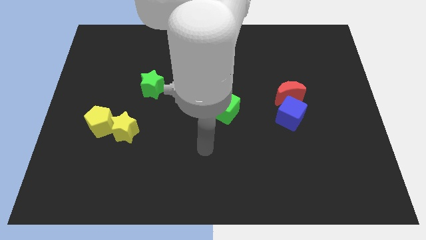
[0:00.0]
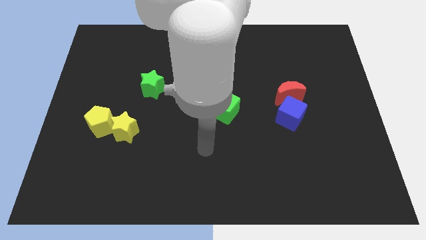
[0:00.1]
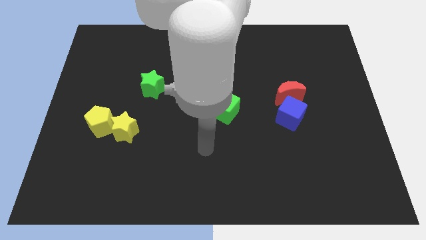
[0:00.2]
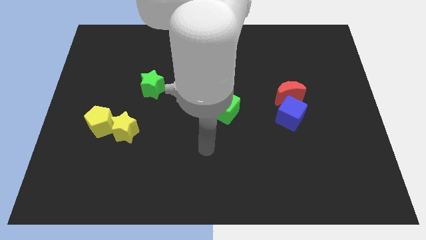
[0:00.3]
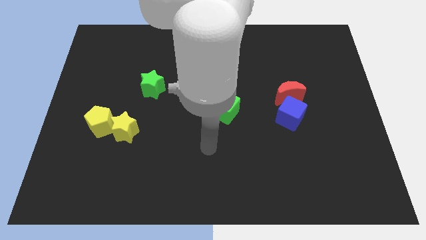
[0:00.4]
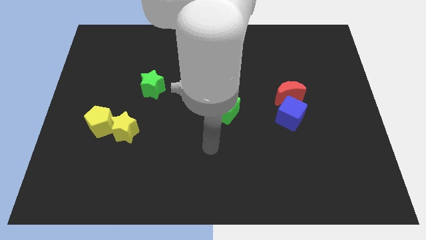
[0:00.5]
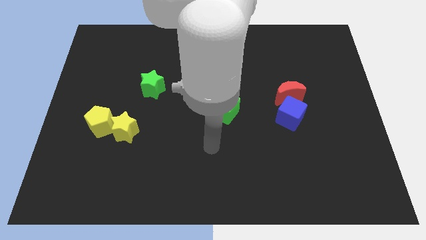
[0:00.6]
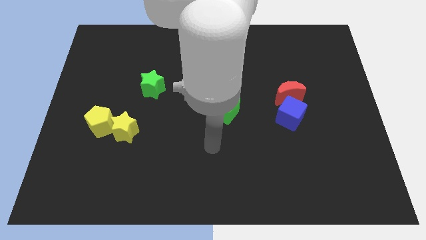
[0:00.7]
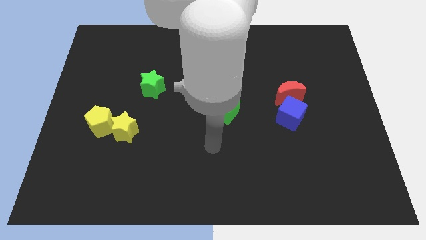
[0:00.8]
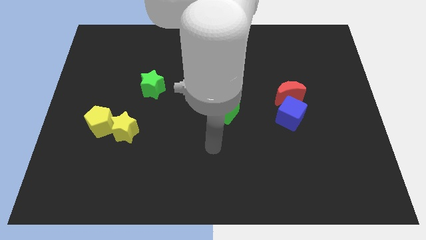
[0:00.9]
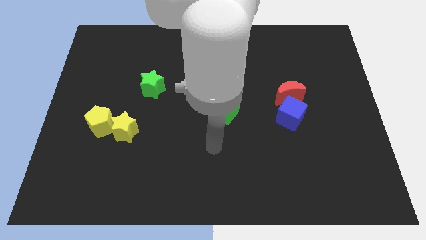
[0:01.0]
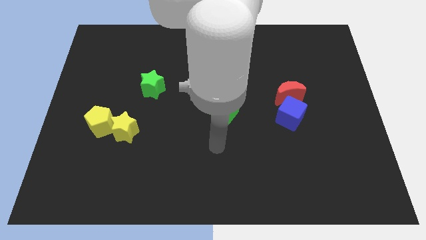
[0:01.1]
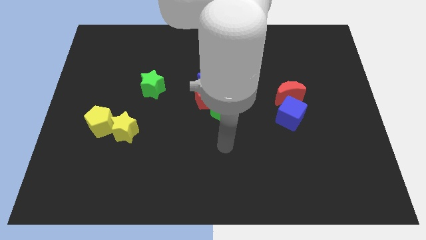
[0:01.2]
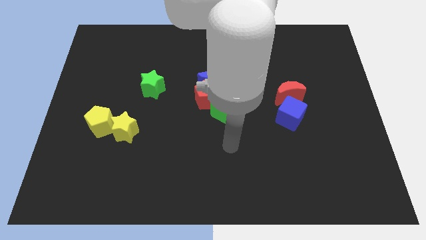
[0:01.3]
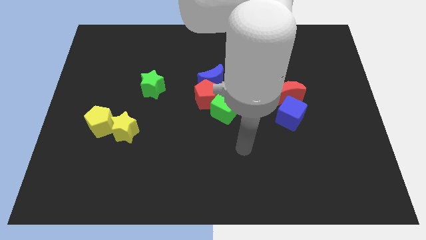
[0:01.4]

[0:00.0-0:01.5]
move the arm at the bottom of the green cube vertically

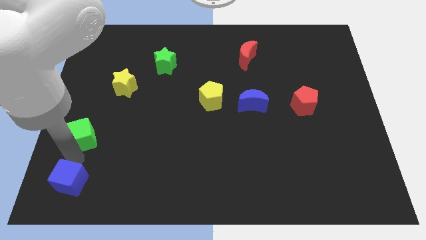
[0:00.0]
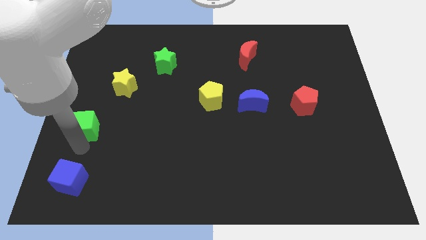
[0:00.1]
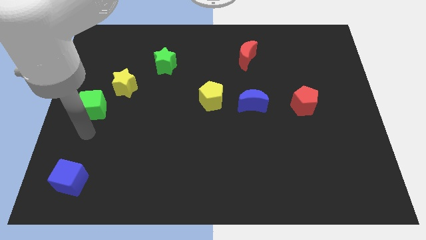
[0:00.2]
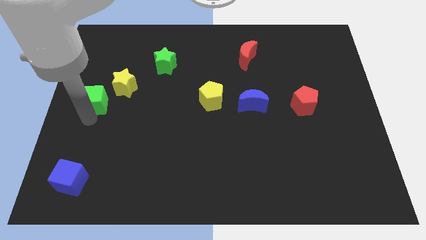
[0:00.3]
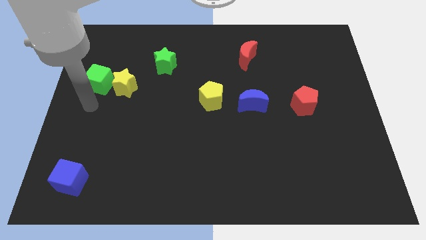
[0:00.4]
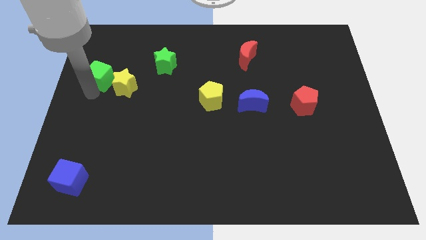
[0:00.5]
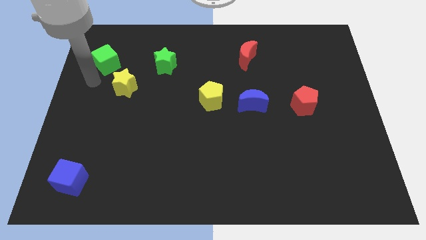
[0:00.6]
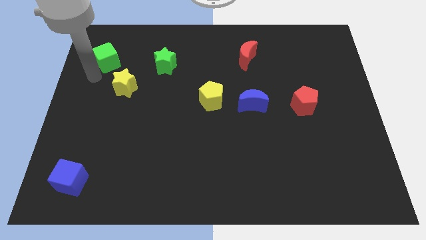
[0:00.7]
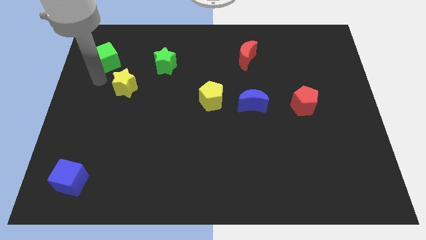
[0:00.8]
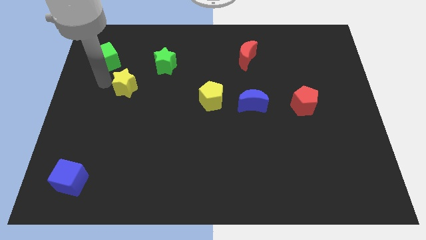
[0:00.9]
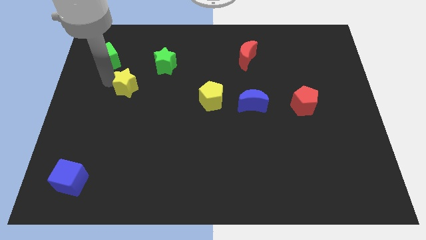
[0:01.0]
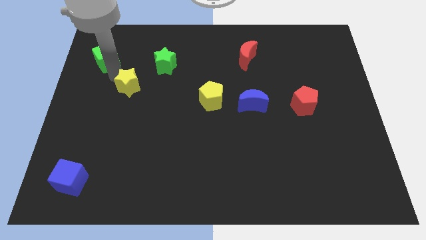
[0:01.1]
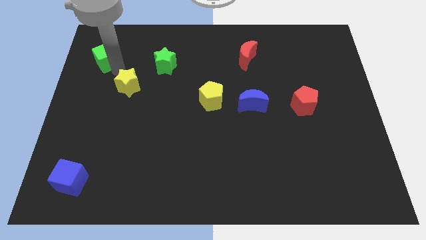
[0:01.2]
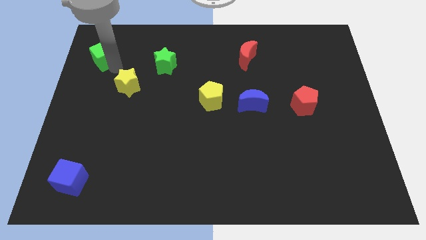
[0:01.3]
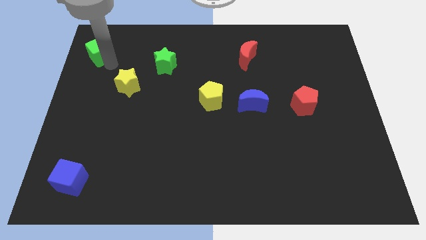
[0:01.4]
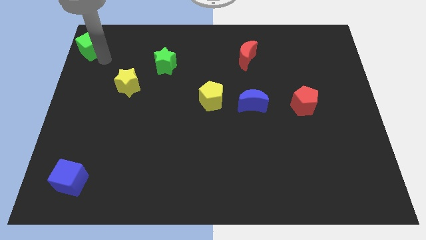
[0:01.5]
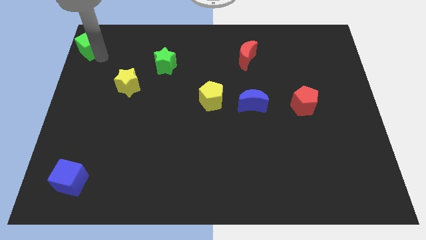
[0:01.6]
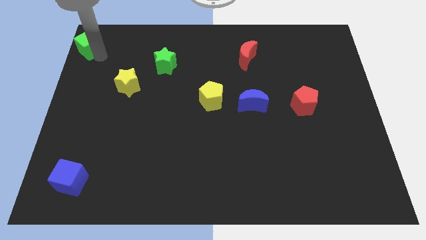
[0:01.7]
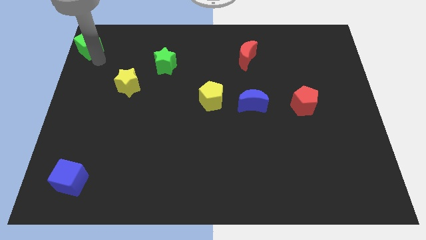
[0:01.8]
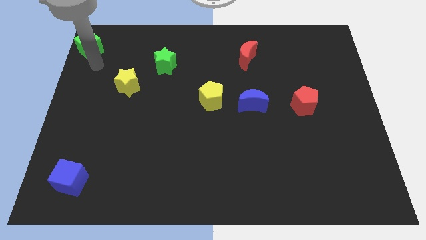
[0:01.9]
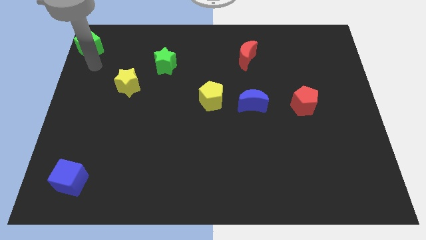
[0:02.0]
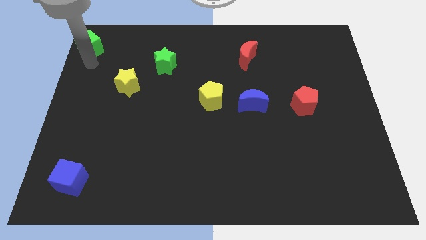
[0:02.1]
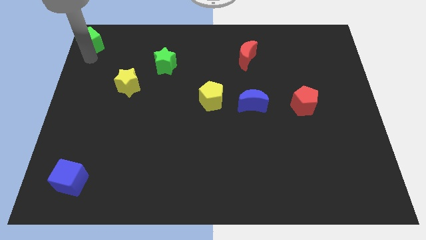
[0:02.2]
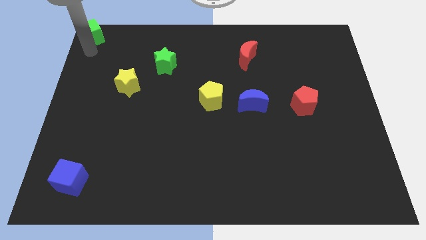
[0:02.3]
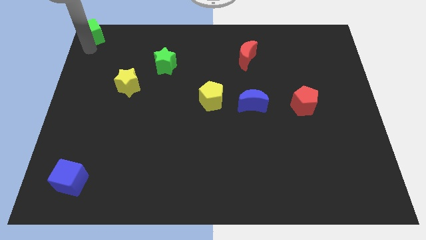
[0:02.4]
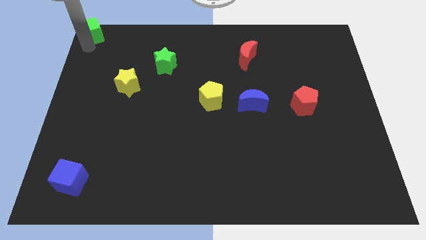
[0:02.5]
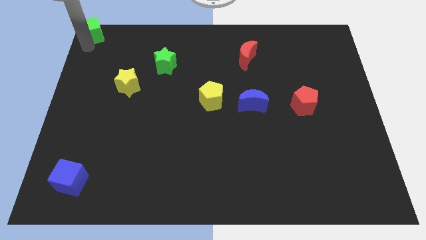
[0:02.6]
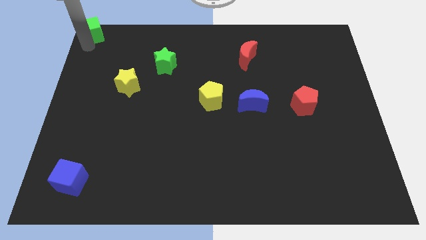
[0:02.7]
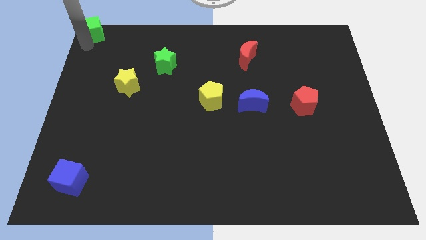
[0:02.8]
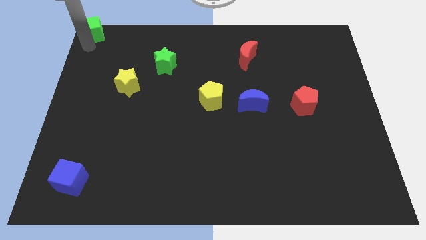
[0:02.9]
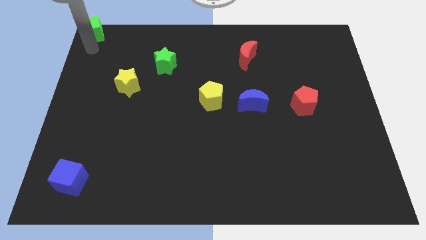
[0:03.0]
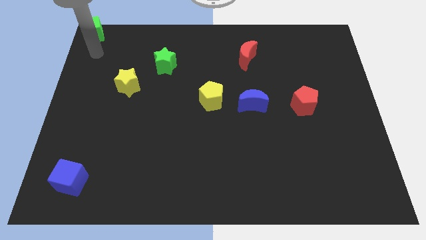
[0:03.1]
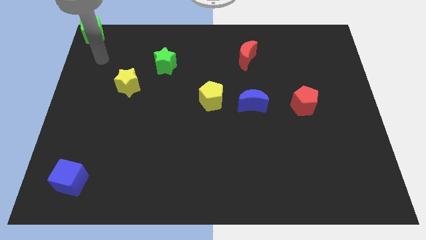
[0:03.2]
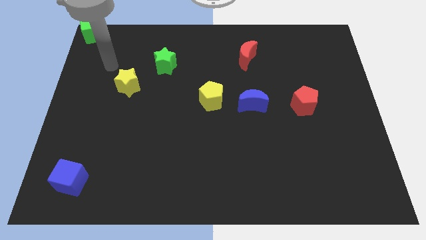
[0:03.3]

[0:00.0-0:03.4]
push the green cube to the top left of the board

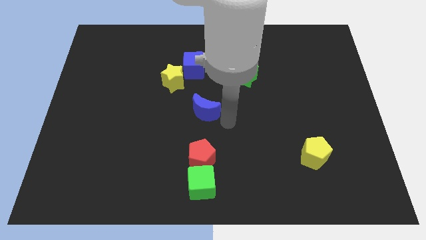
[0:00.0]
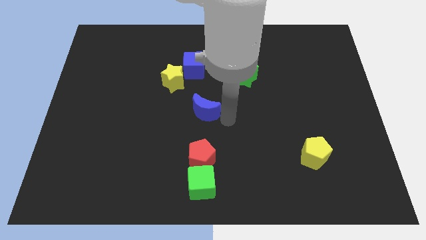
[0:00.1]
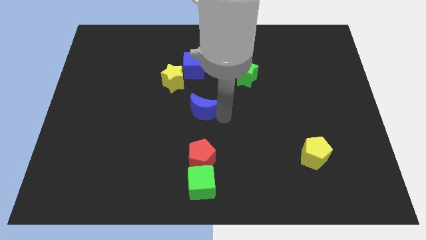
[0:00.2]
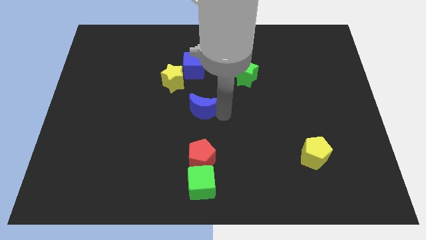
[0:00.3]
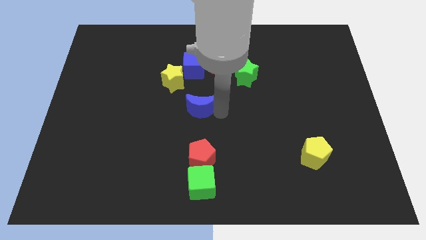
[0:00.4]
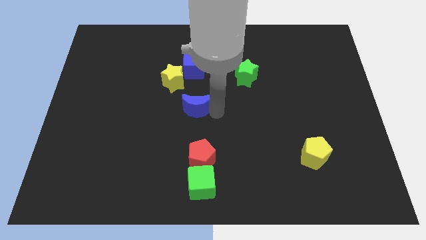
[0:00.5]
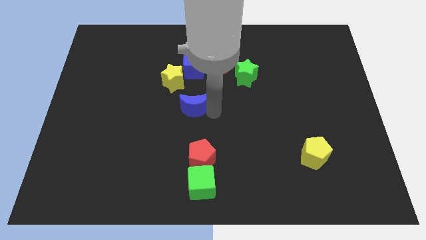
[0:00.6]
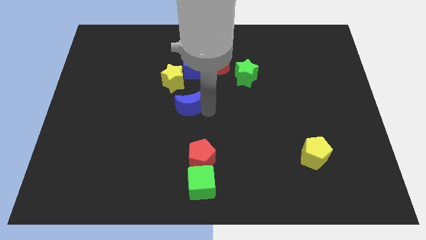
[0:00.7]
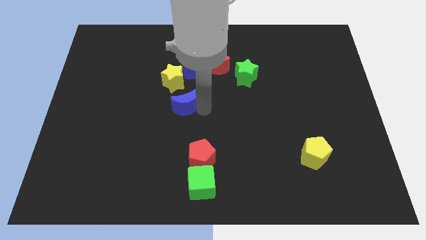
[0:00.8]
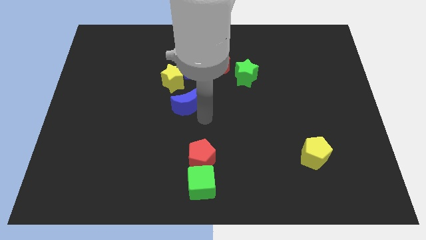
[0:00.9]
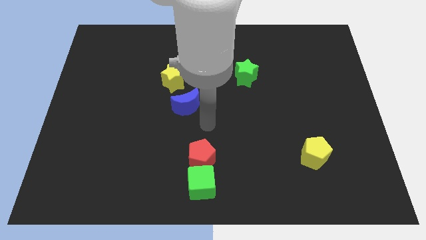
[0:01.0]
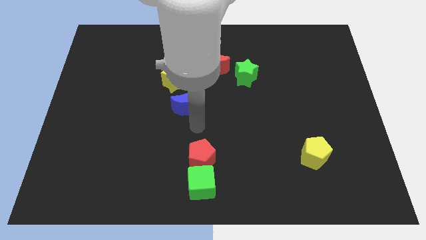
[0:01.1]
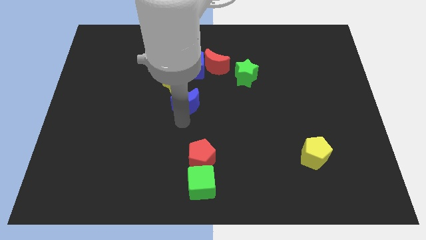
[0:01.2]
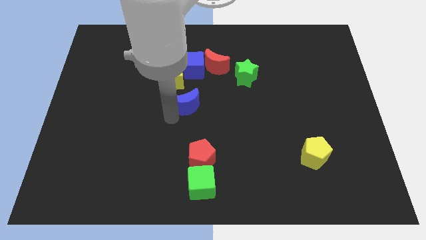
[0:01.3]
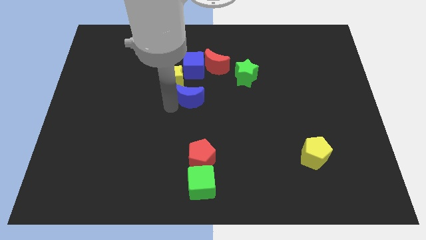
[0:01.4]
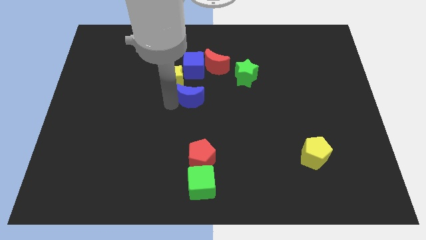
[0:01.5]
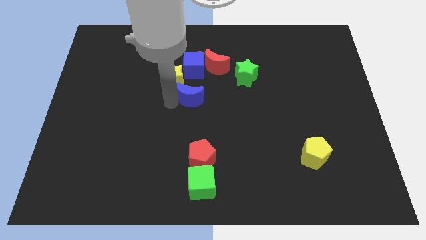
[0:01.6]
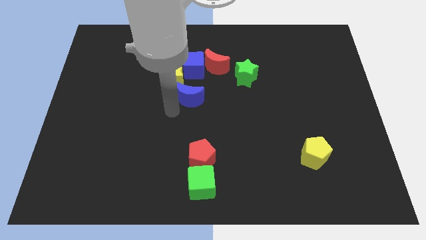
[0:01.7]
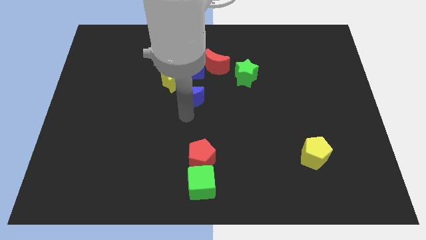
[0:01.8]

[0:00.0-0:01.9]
place the blue crescent towards the bottom of the yellow star

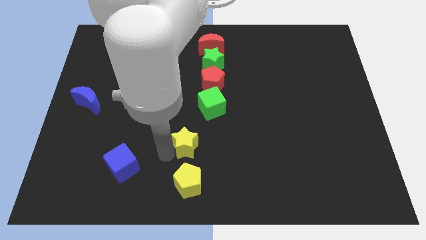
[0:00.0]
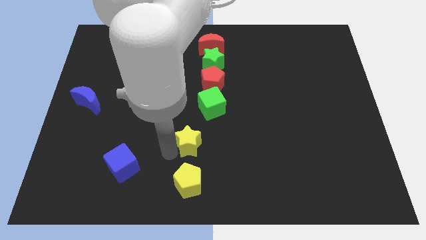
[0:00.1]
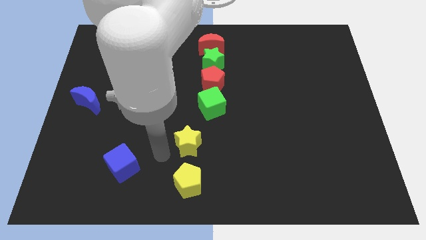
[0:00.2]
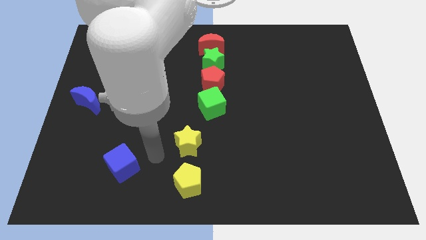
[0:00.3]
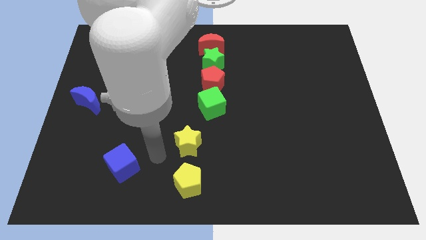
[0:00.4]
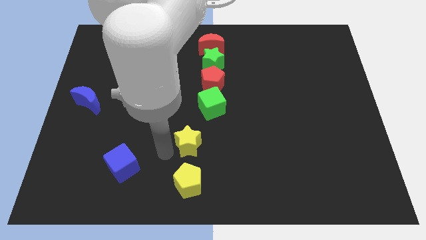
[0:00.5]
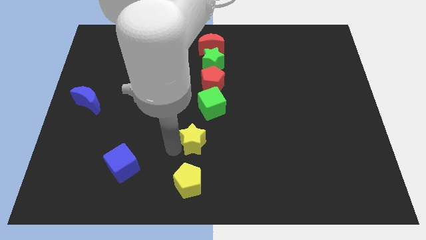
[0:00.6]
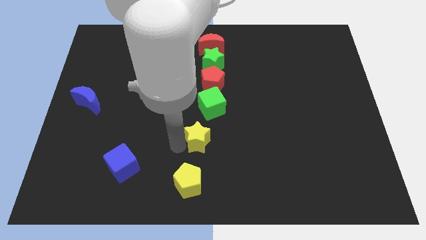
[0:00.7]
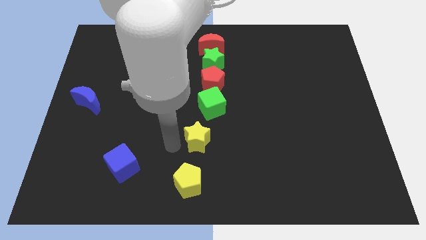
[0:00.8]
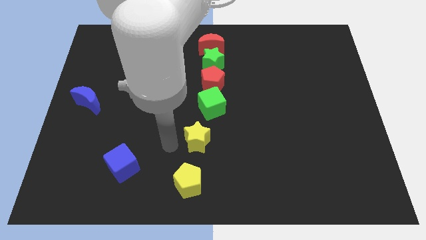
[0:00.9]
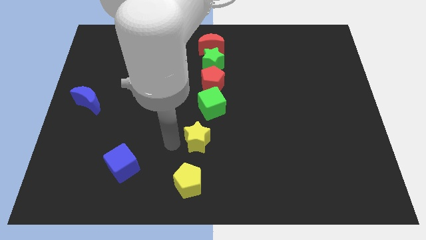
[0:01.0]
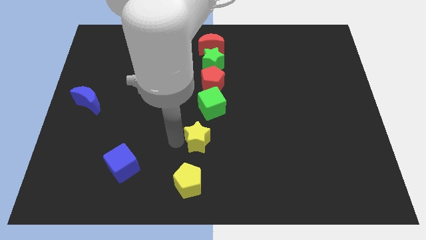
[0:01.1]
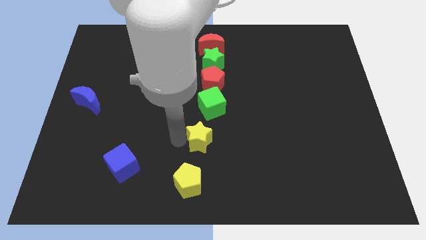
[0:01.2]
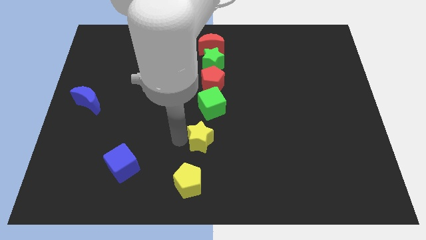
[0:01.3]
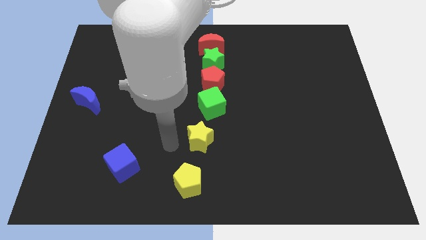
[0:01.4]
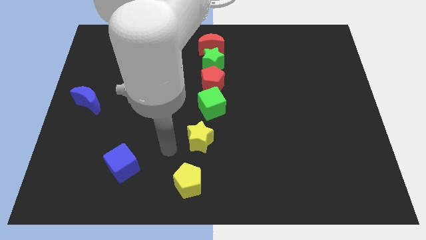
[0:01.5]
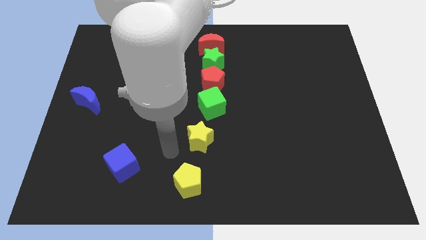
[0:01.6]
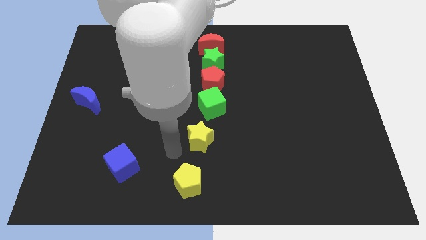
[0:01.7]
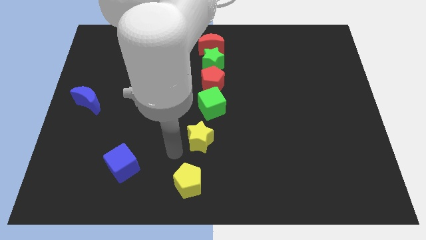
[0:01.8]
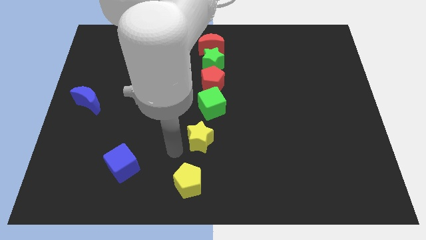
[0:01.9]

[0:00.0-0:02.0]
push the yellow star to the bottom of the green cube
